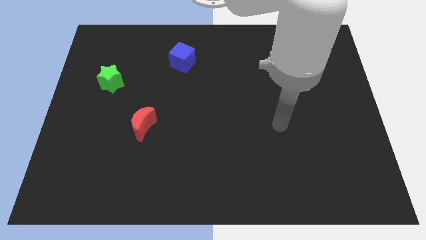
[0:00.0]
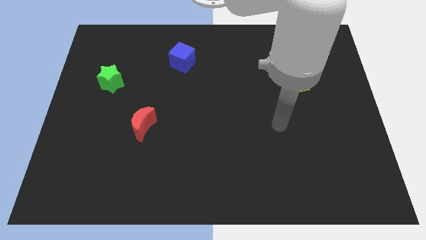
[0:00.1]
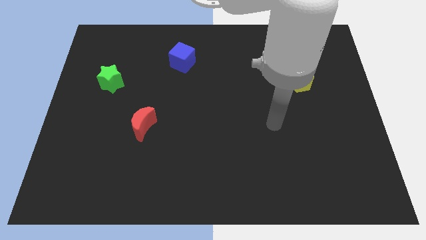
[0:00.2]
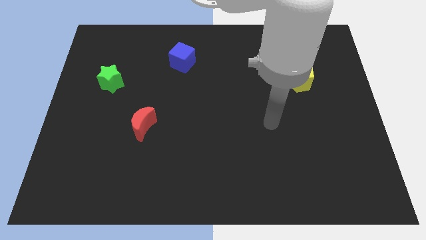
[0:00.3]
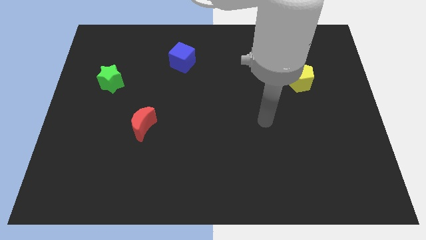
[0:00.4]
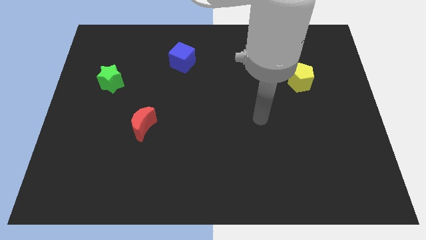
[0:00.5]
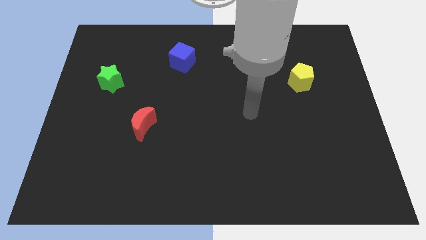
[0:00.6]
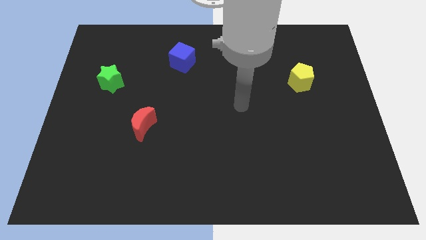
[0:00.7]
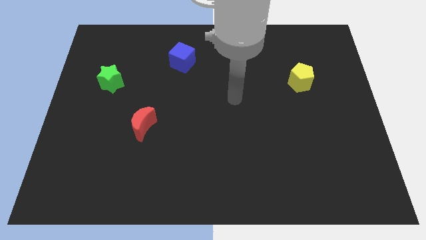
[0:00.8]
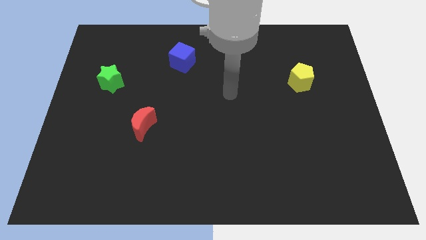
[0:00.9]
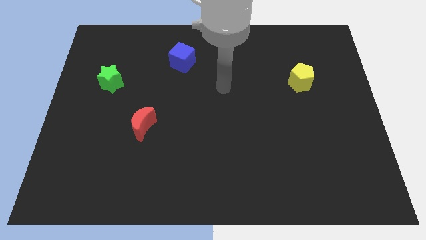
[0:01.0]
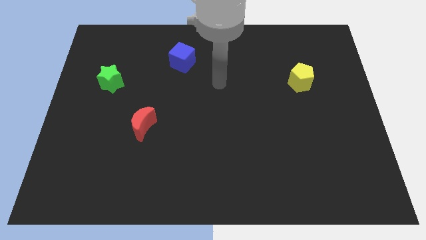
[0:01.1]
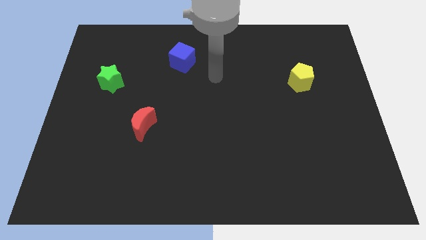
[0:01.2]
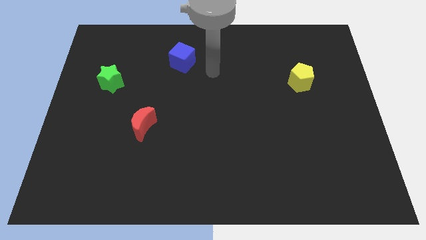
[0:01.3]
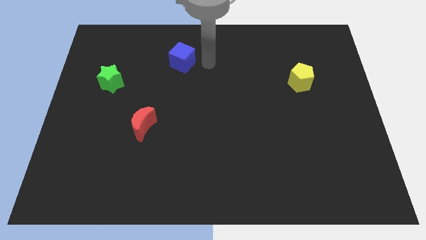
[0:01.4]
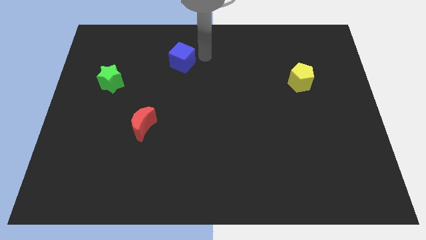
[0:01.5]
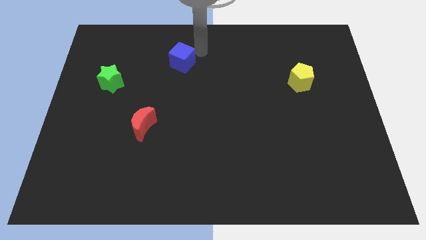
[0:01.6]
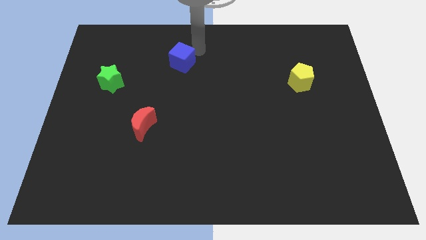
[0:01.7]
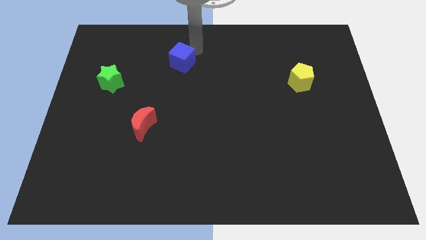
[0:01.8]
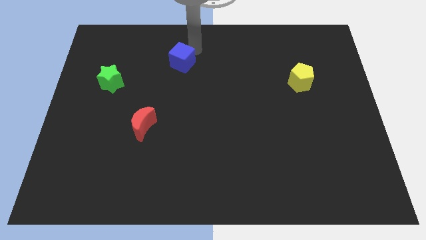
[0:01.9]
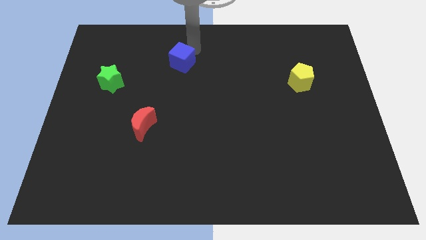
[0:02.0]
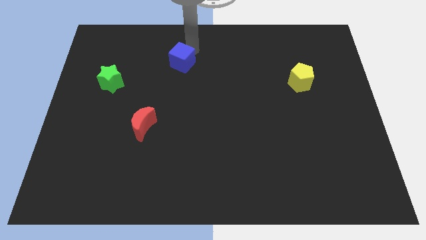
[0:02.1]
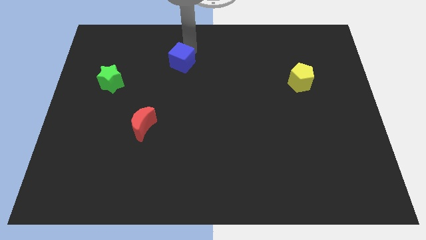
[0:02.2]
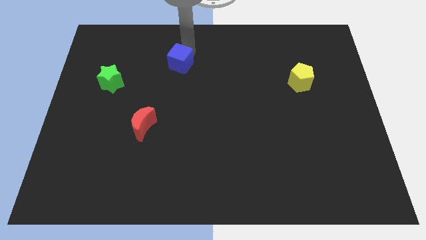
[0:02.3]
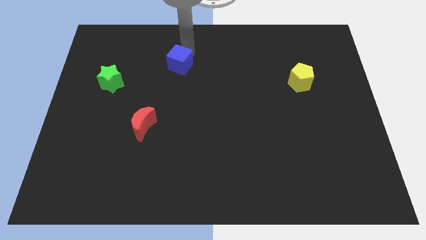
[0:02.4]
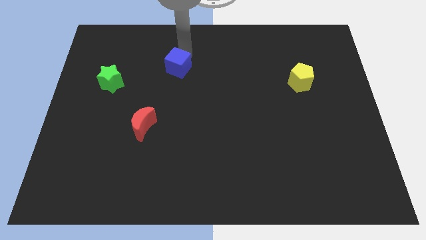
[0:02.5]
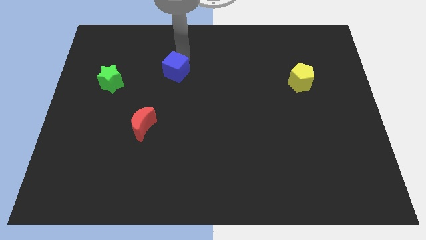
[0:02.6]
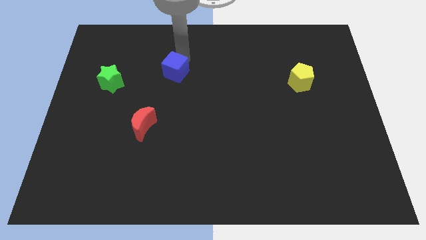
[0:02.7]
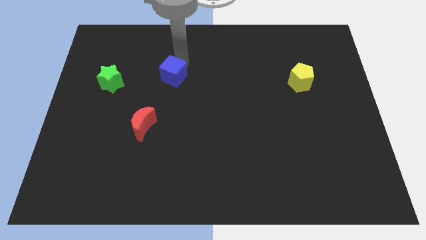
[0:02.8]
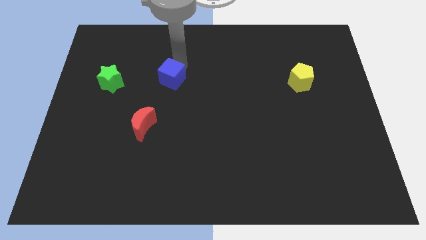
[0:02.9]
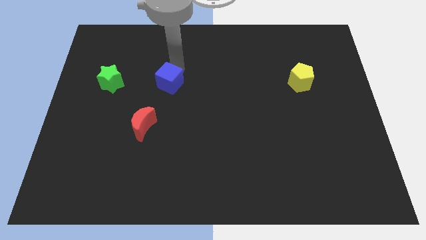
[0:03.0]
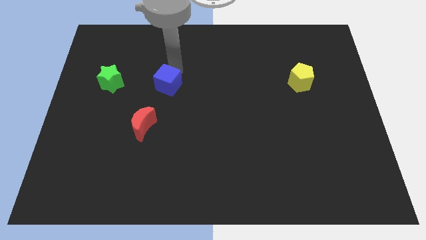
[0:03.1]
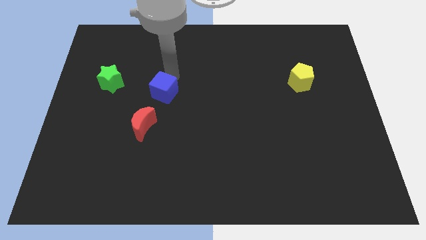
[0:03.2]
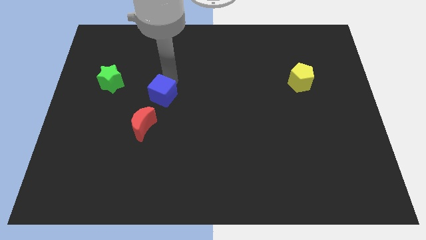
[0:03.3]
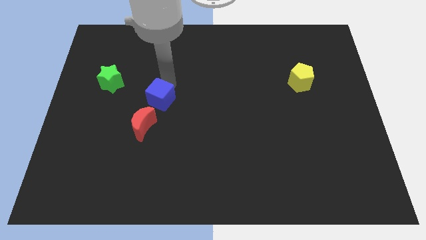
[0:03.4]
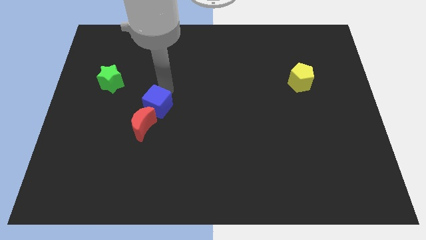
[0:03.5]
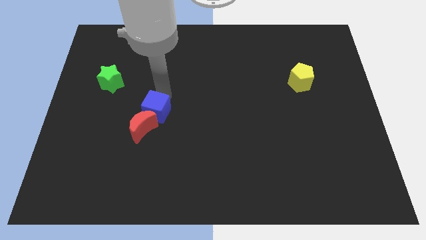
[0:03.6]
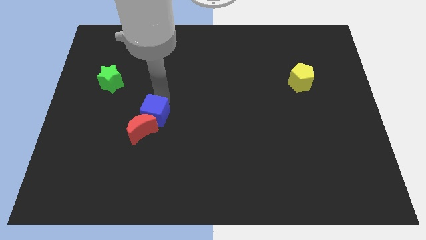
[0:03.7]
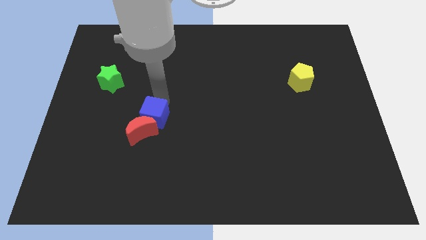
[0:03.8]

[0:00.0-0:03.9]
push the blue block close to the moon

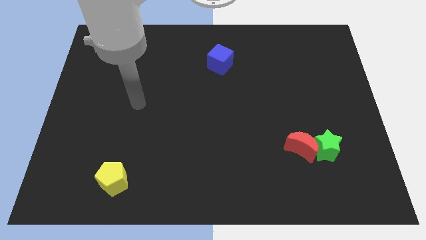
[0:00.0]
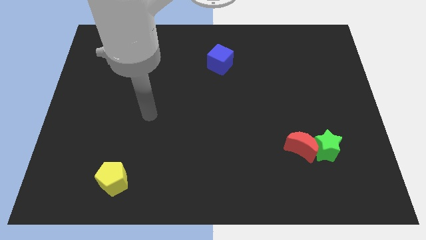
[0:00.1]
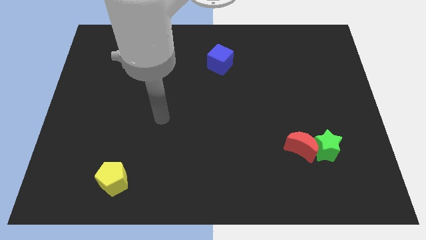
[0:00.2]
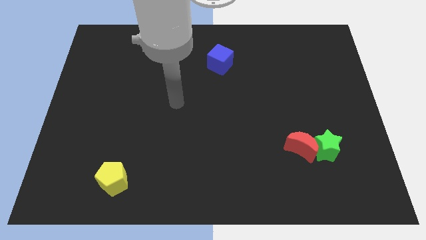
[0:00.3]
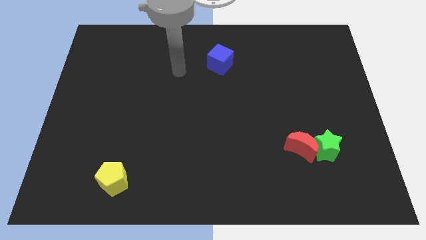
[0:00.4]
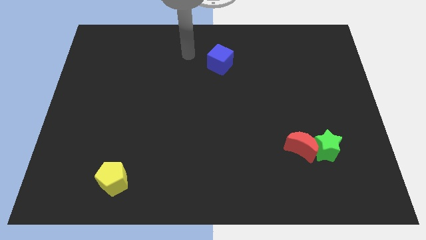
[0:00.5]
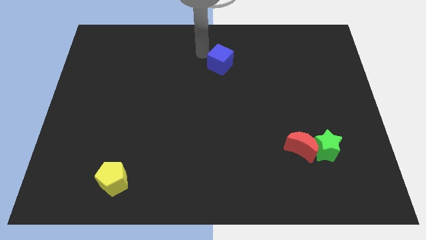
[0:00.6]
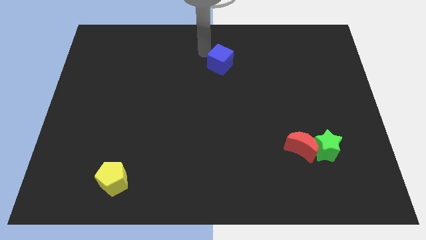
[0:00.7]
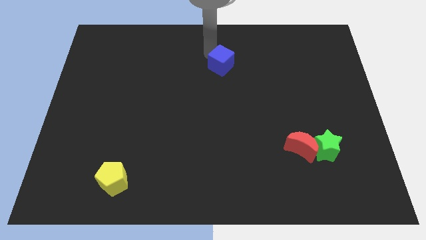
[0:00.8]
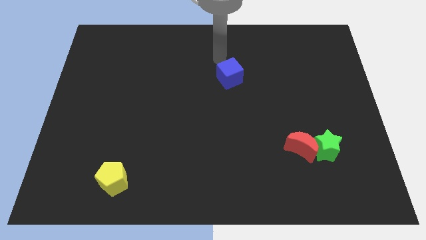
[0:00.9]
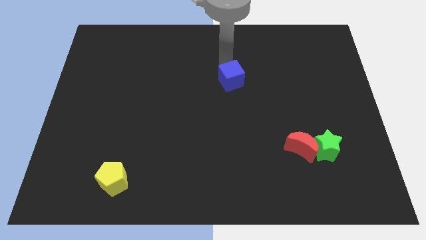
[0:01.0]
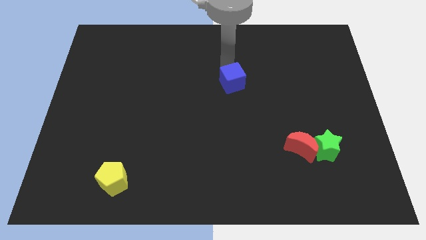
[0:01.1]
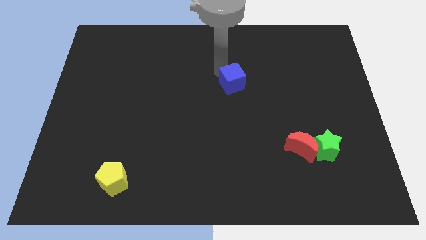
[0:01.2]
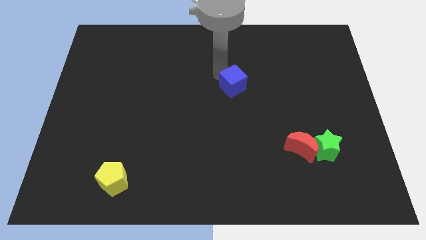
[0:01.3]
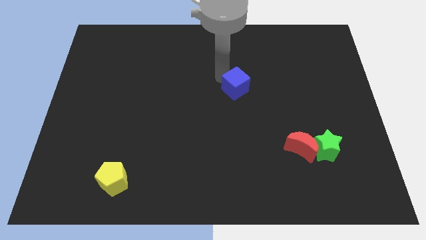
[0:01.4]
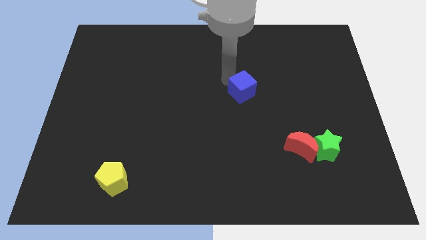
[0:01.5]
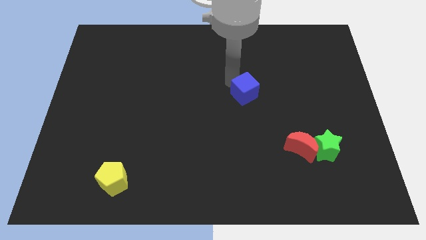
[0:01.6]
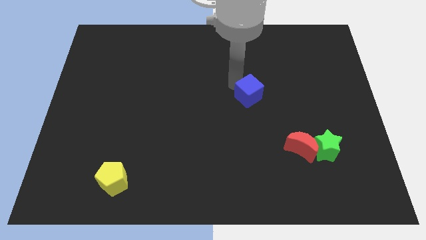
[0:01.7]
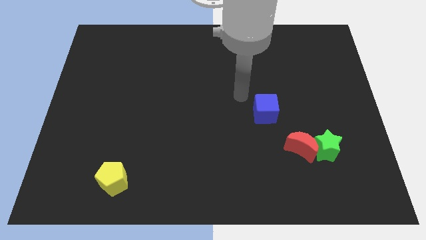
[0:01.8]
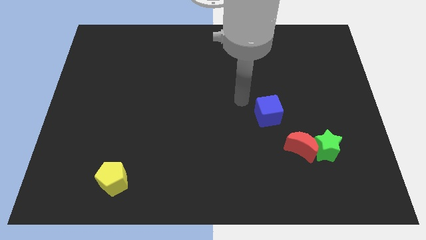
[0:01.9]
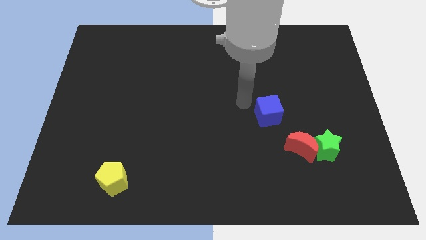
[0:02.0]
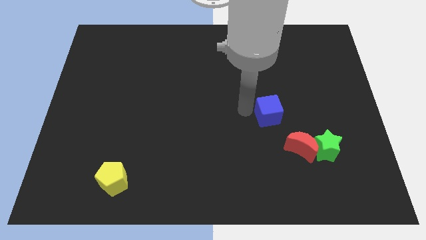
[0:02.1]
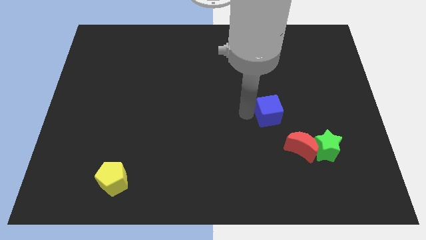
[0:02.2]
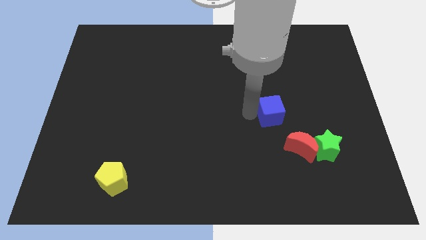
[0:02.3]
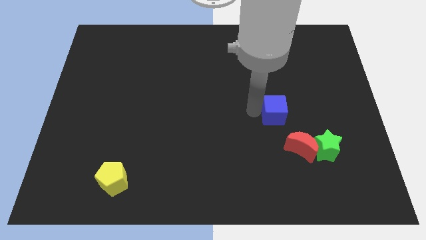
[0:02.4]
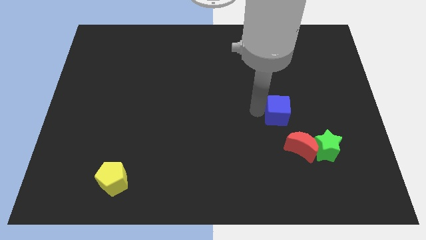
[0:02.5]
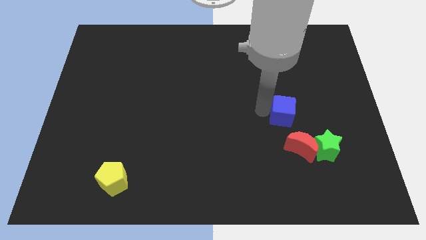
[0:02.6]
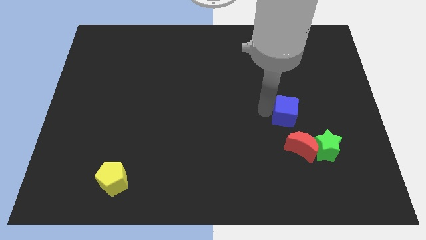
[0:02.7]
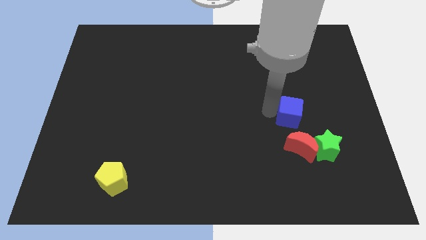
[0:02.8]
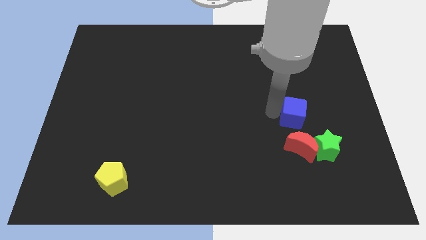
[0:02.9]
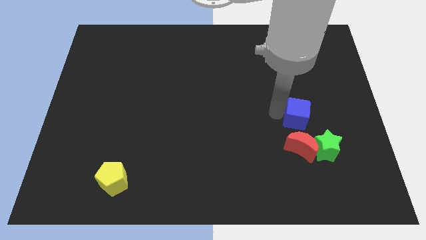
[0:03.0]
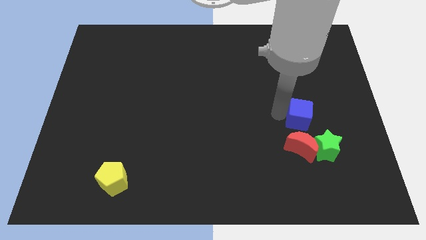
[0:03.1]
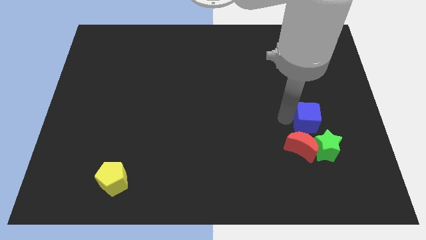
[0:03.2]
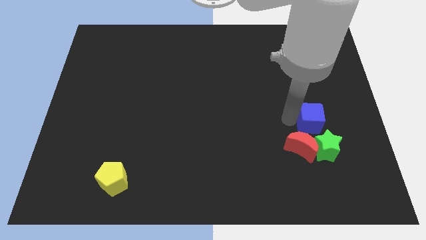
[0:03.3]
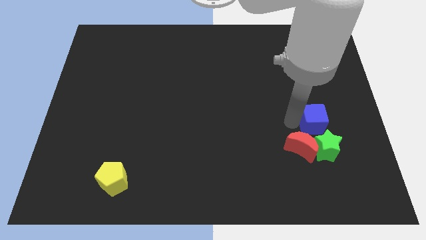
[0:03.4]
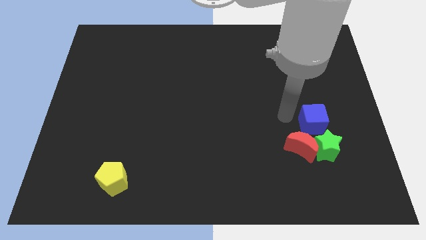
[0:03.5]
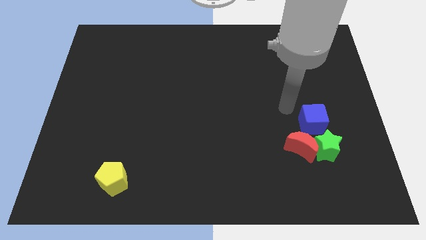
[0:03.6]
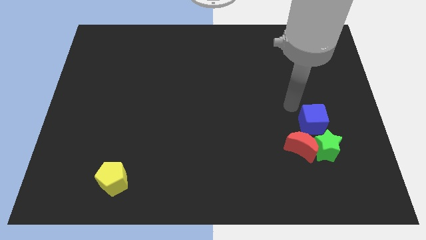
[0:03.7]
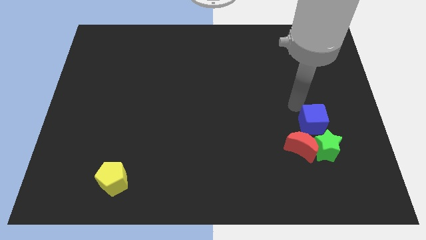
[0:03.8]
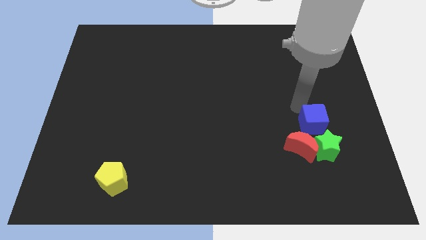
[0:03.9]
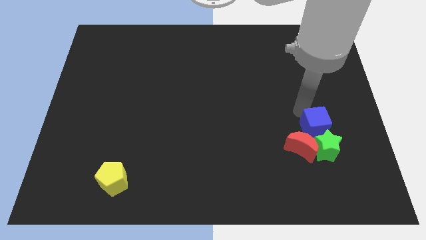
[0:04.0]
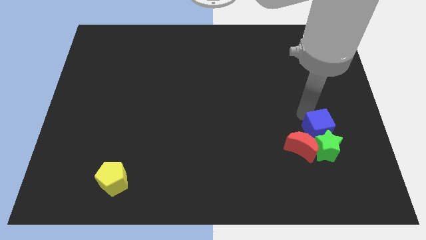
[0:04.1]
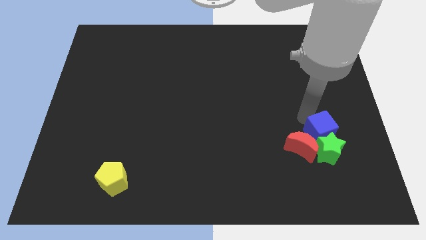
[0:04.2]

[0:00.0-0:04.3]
put the blue cube towards the green block
